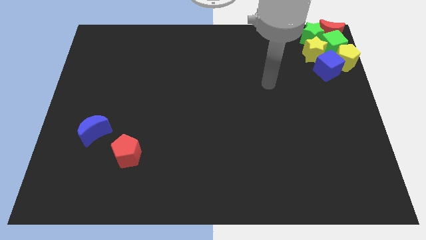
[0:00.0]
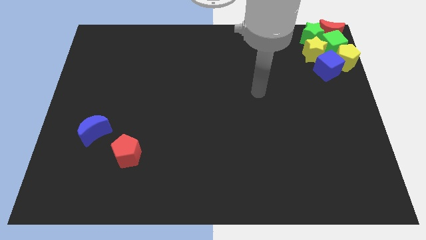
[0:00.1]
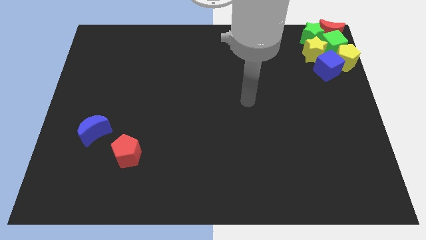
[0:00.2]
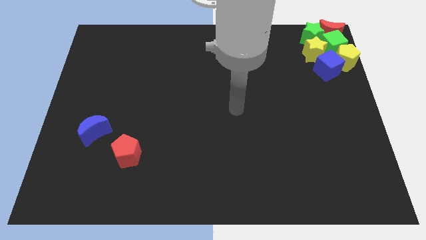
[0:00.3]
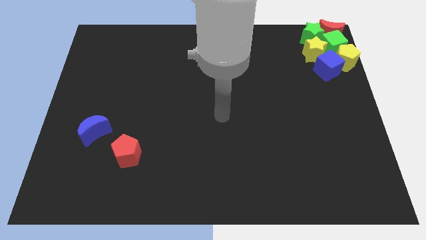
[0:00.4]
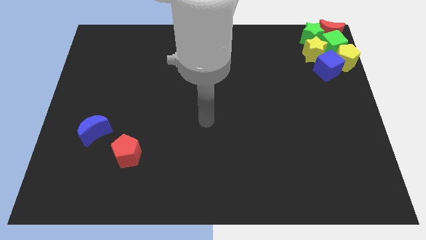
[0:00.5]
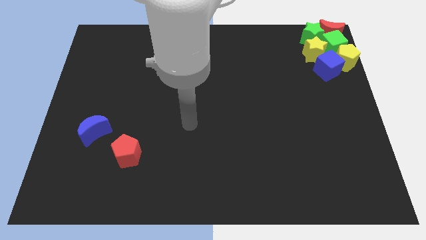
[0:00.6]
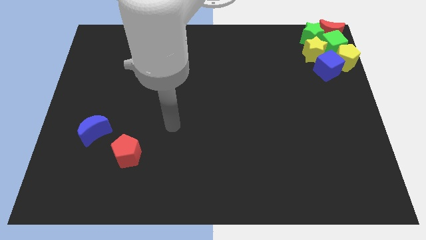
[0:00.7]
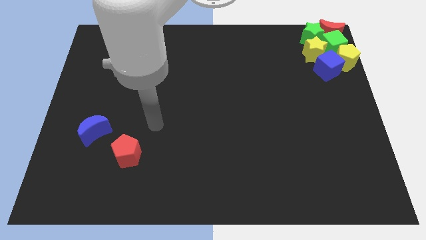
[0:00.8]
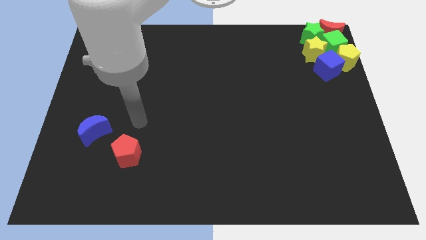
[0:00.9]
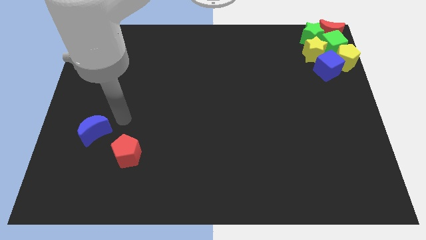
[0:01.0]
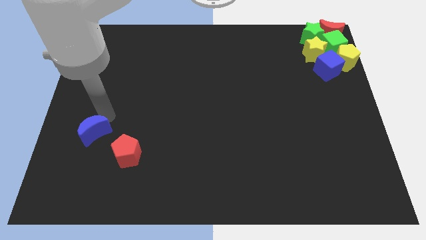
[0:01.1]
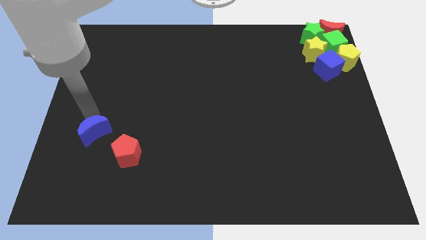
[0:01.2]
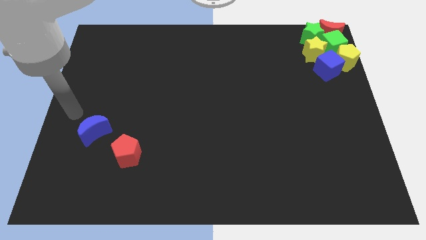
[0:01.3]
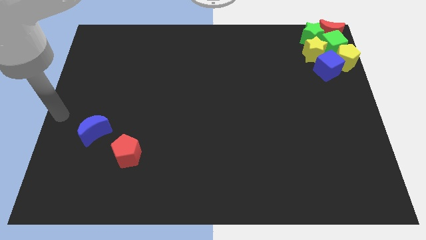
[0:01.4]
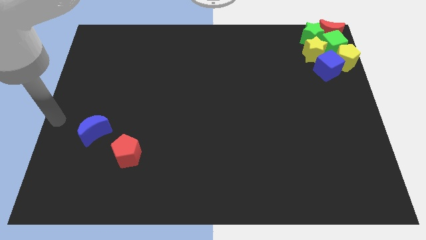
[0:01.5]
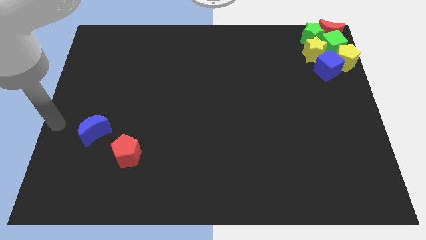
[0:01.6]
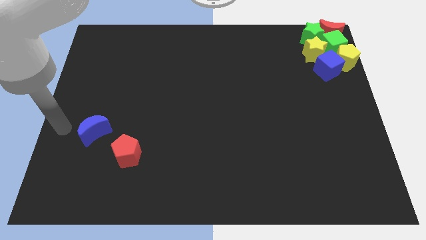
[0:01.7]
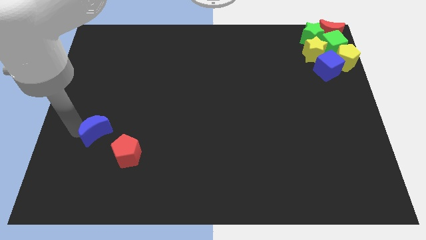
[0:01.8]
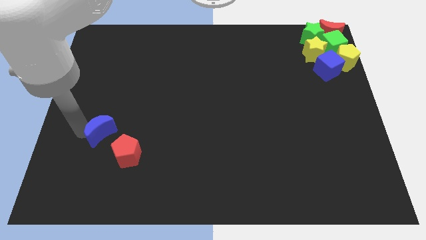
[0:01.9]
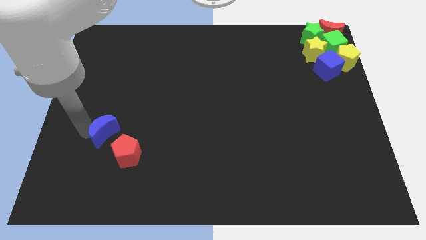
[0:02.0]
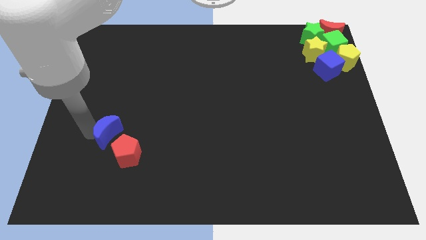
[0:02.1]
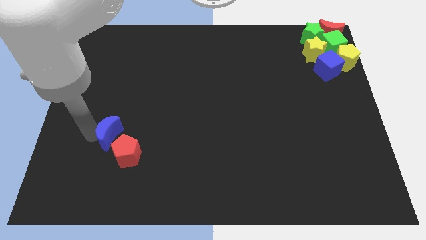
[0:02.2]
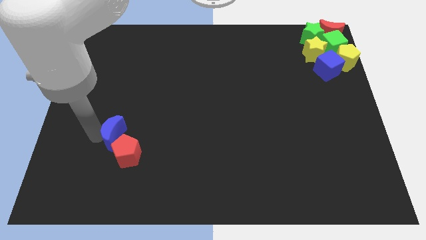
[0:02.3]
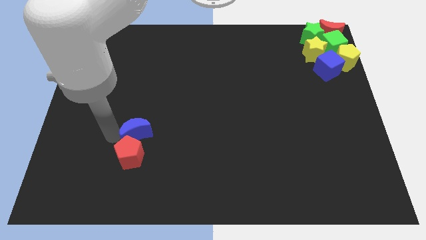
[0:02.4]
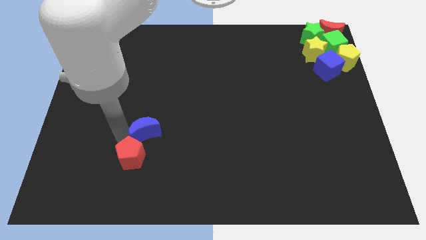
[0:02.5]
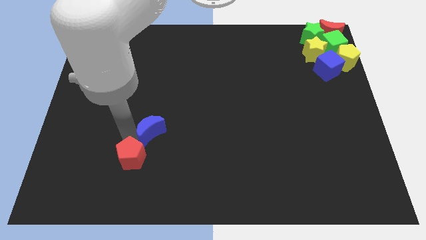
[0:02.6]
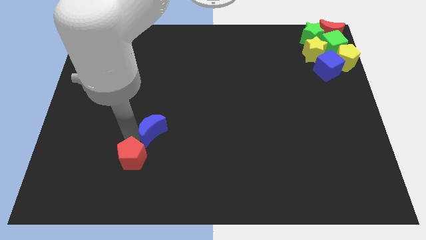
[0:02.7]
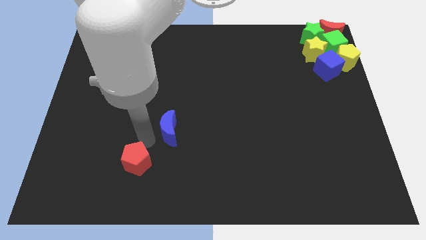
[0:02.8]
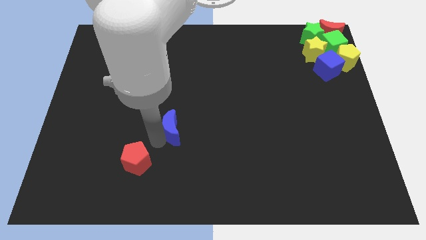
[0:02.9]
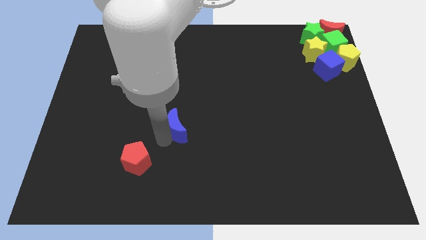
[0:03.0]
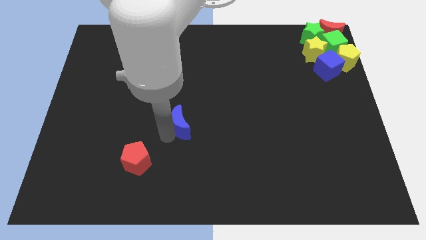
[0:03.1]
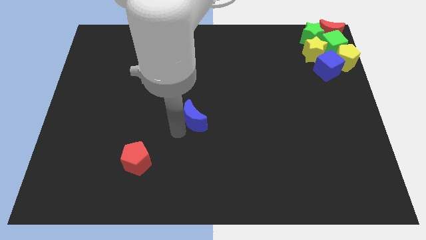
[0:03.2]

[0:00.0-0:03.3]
place the blue moon diagonally right to the red pentagon

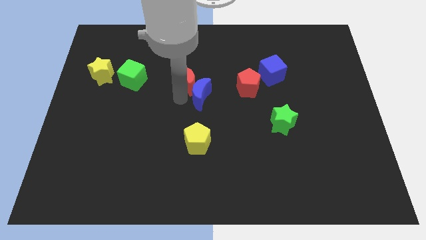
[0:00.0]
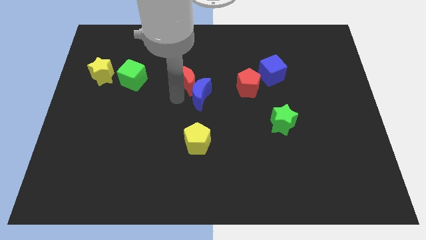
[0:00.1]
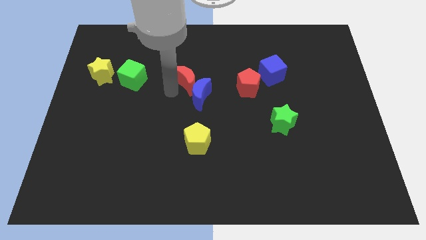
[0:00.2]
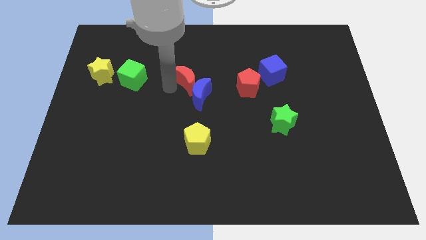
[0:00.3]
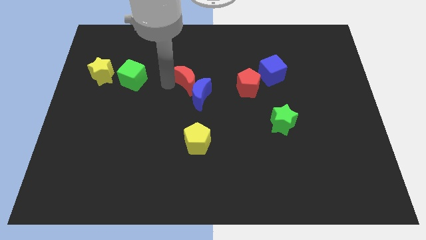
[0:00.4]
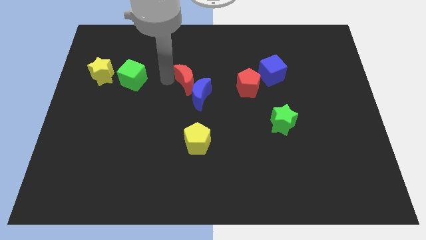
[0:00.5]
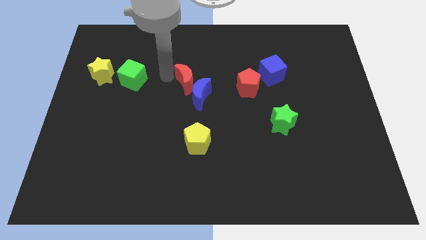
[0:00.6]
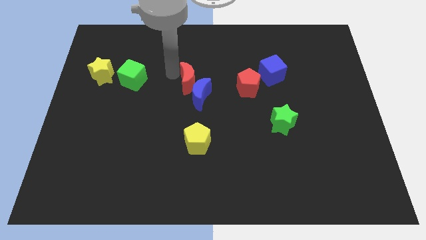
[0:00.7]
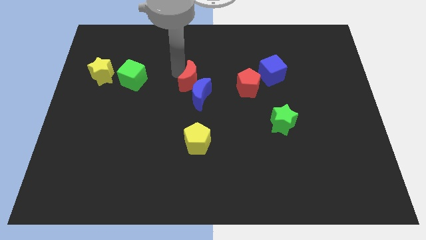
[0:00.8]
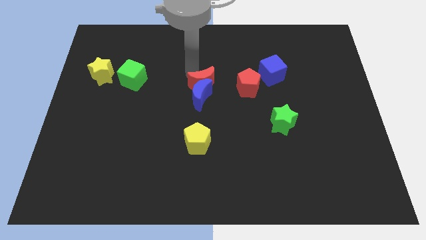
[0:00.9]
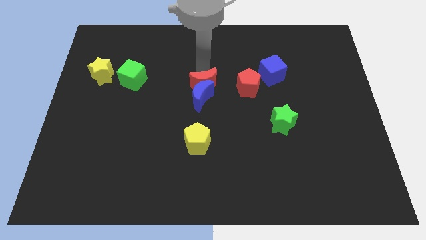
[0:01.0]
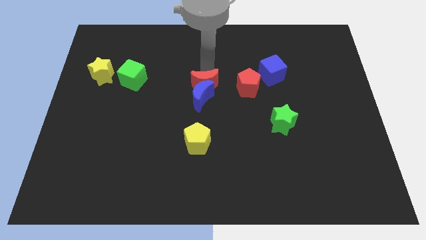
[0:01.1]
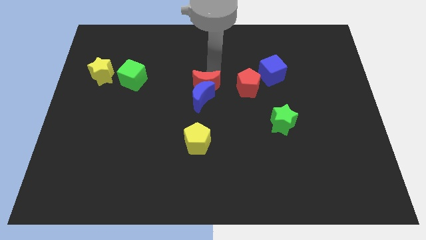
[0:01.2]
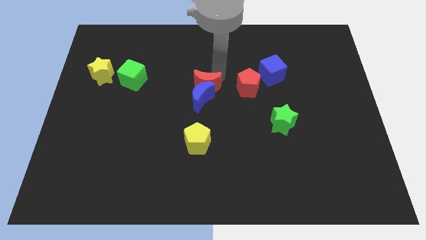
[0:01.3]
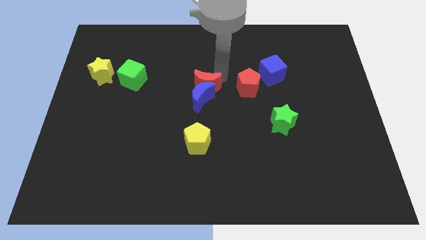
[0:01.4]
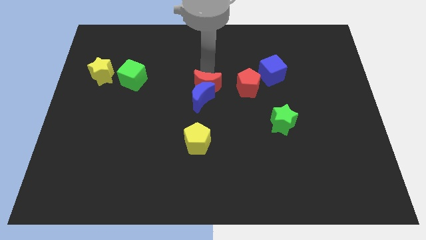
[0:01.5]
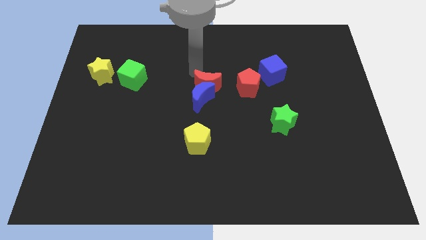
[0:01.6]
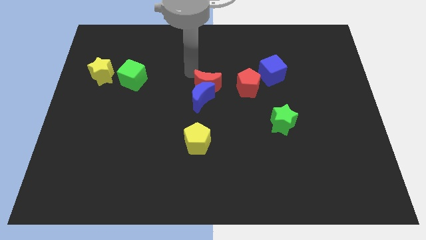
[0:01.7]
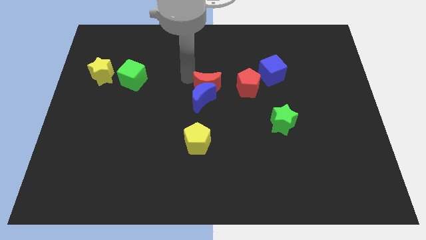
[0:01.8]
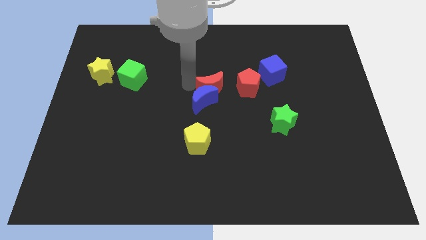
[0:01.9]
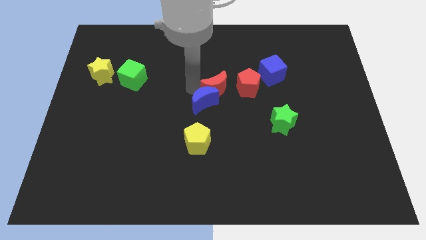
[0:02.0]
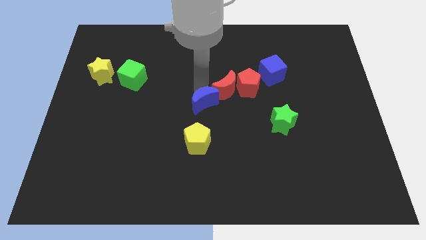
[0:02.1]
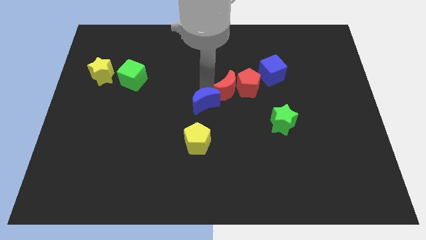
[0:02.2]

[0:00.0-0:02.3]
place the red crescent left to the red pentagon

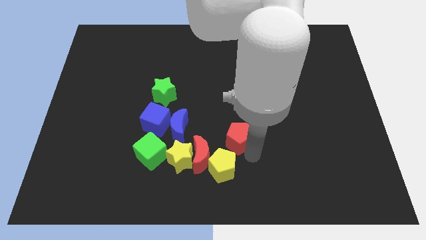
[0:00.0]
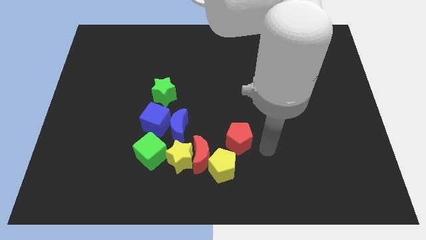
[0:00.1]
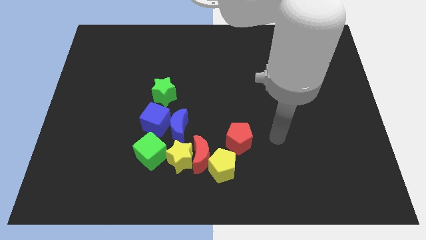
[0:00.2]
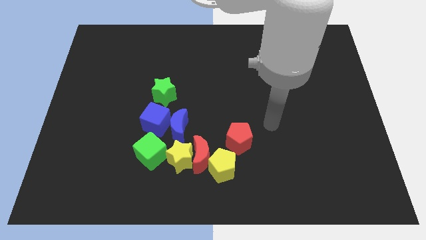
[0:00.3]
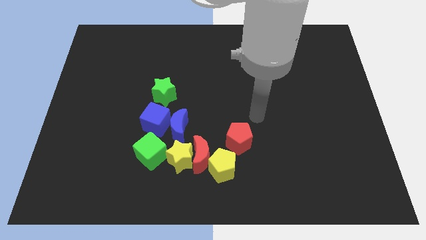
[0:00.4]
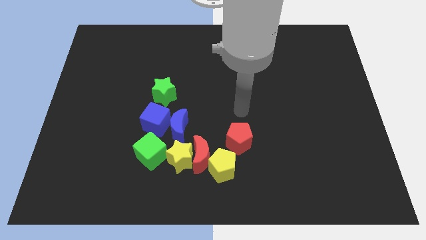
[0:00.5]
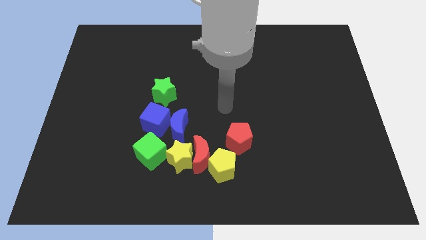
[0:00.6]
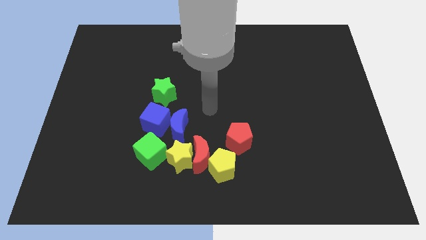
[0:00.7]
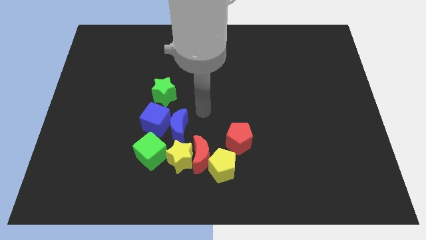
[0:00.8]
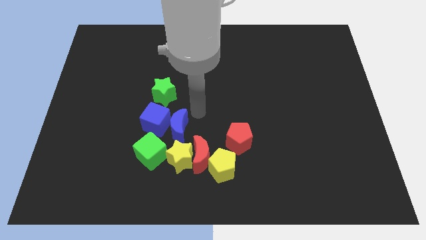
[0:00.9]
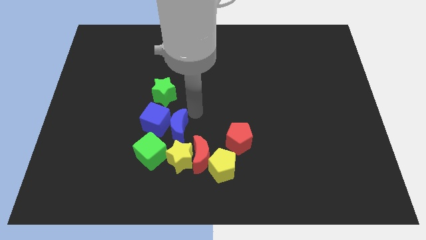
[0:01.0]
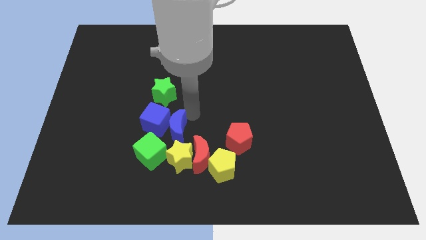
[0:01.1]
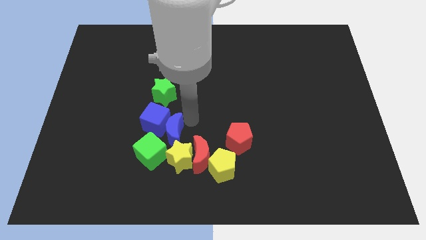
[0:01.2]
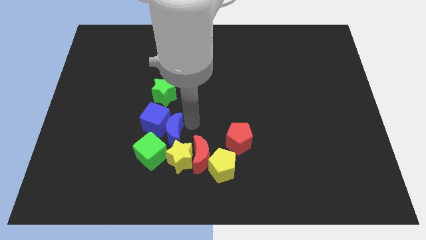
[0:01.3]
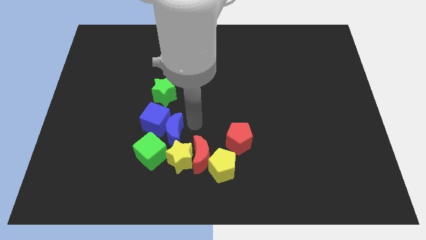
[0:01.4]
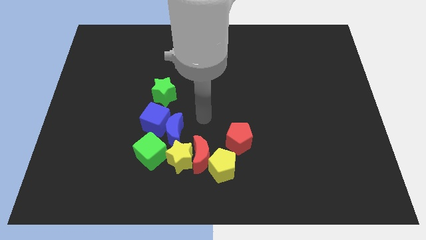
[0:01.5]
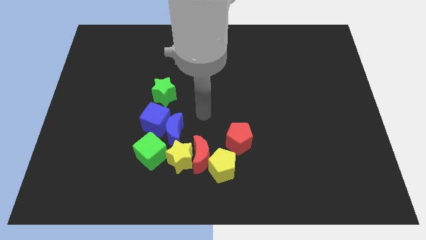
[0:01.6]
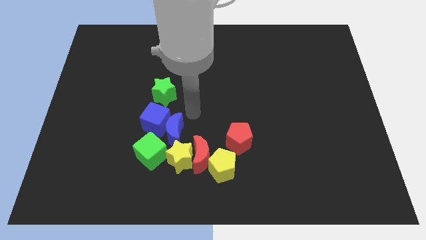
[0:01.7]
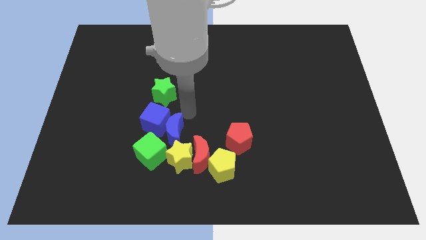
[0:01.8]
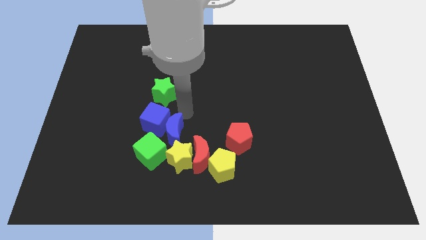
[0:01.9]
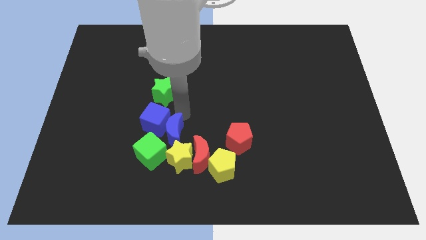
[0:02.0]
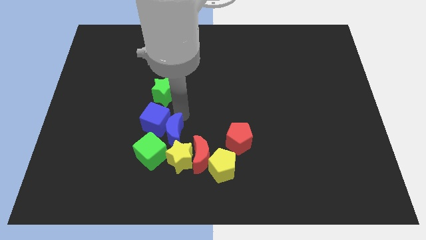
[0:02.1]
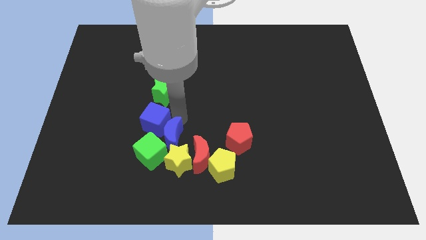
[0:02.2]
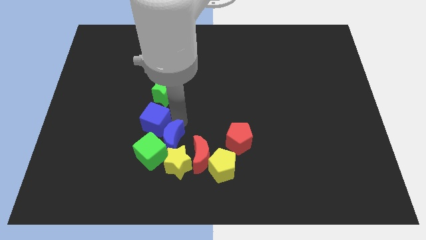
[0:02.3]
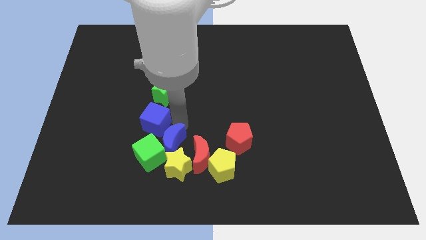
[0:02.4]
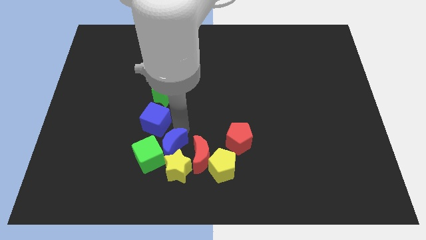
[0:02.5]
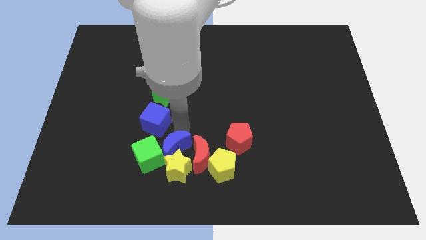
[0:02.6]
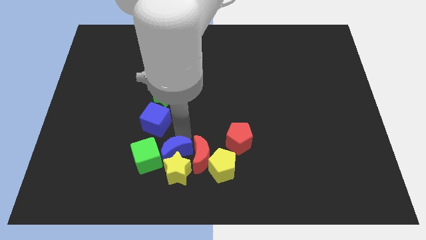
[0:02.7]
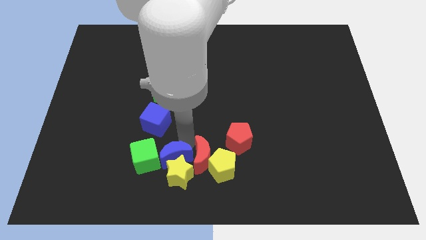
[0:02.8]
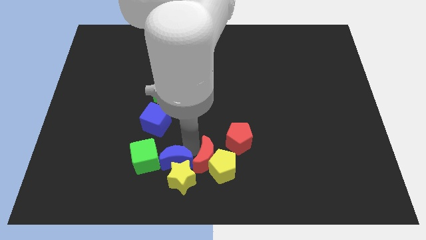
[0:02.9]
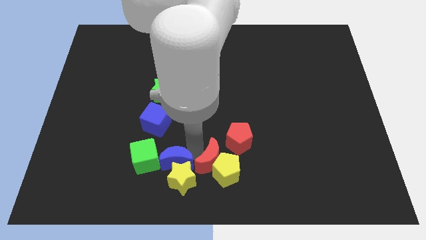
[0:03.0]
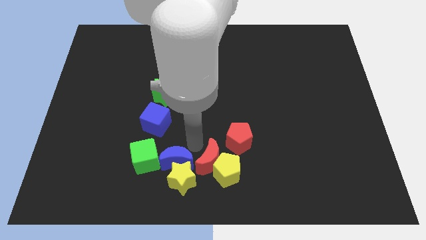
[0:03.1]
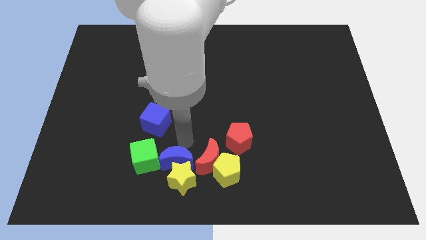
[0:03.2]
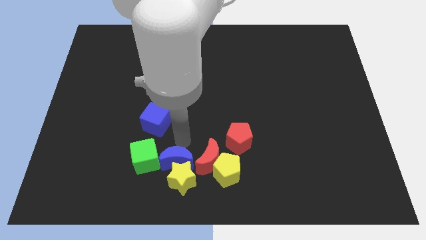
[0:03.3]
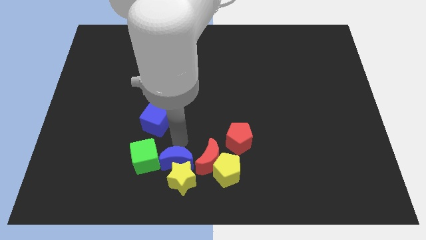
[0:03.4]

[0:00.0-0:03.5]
place the blue moon between the green cube and red moon
